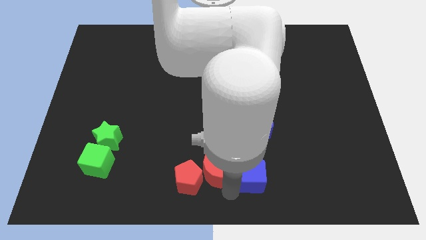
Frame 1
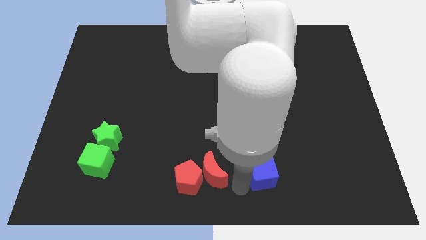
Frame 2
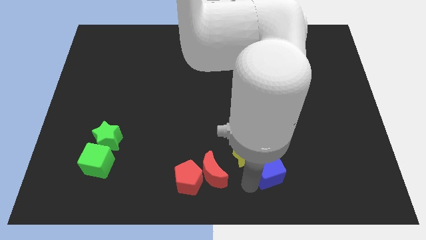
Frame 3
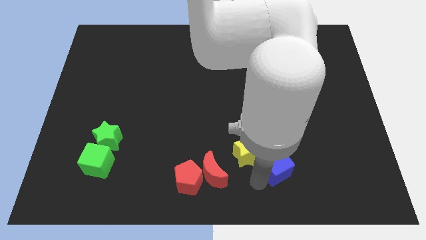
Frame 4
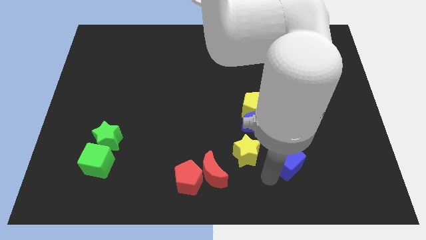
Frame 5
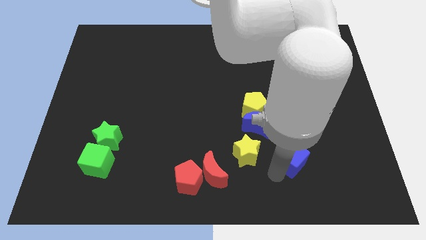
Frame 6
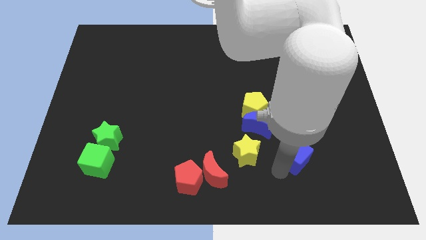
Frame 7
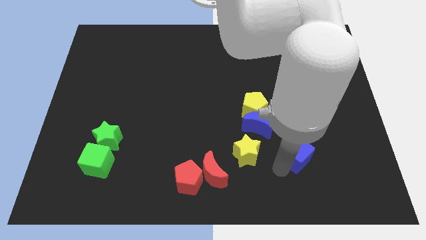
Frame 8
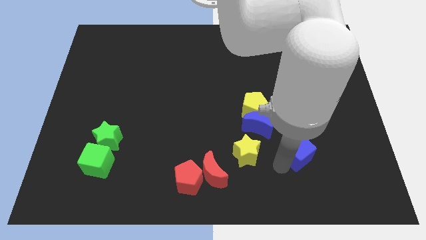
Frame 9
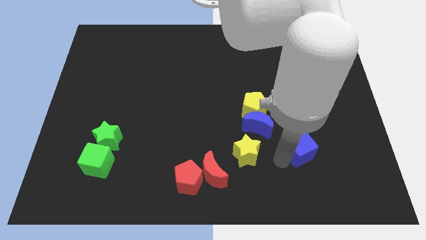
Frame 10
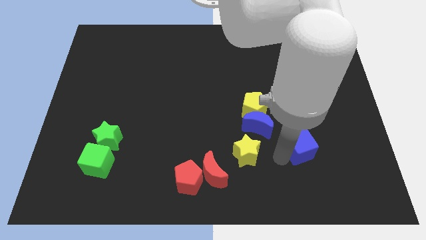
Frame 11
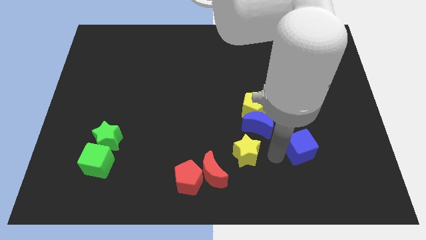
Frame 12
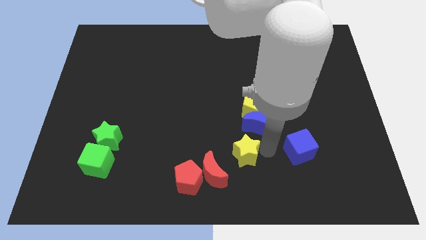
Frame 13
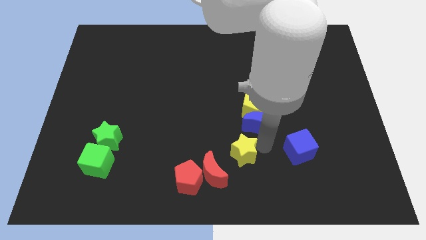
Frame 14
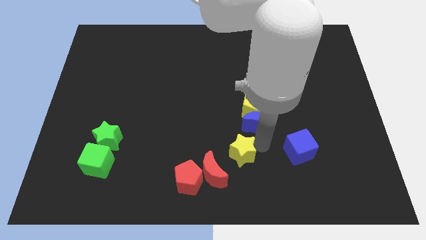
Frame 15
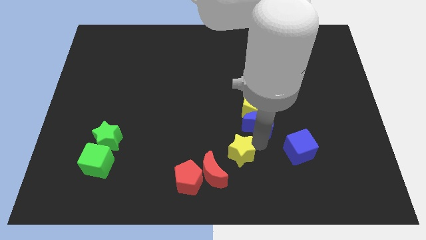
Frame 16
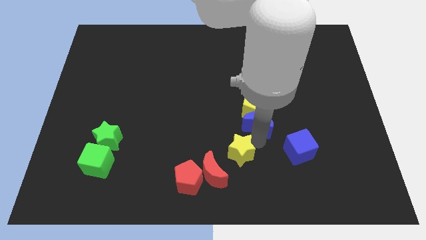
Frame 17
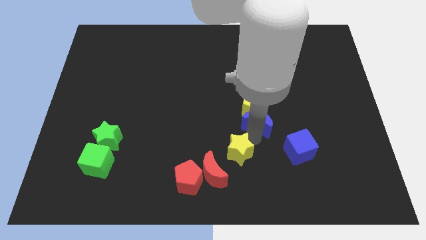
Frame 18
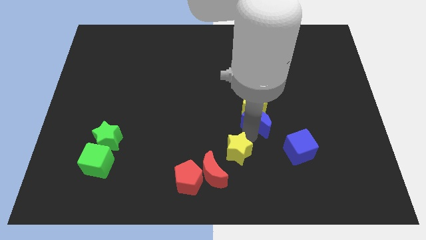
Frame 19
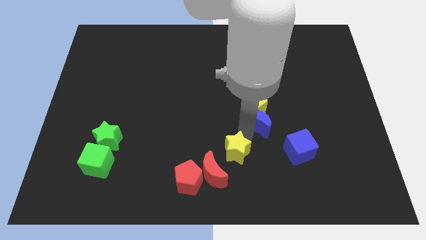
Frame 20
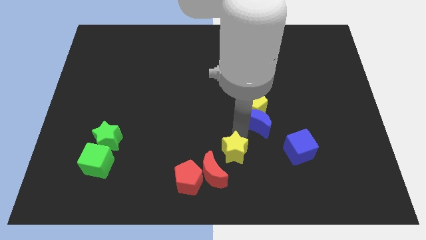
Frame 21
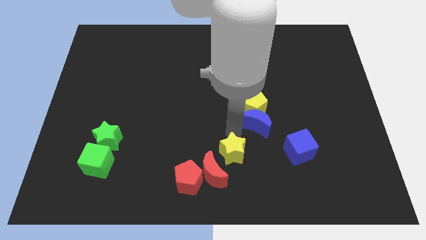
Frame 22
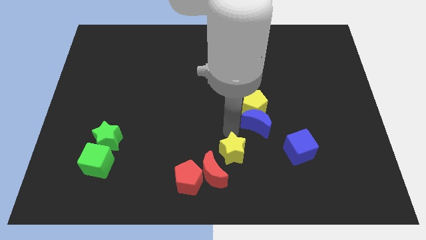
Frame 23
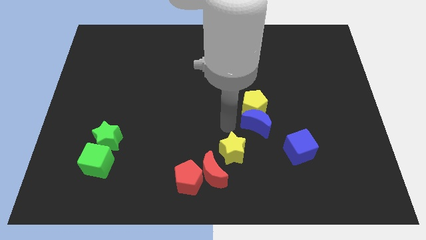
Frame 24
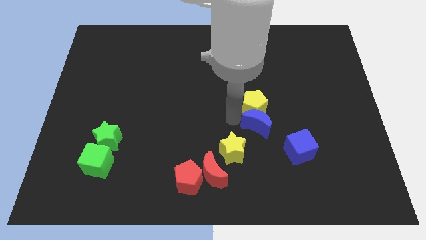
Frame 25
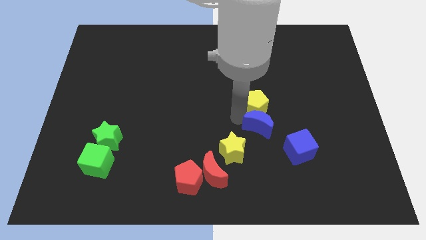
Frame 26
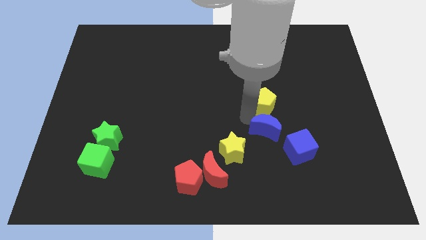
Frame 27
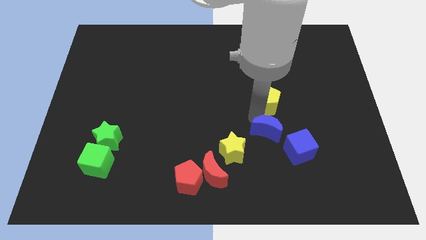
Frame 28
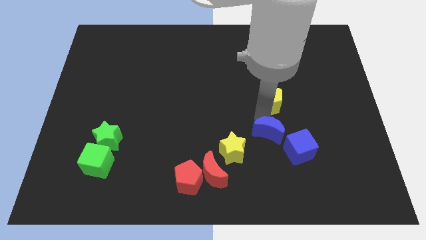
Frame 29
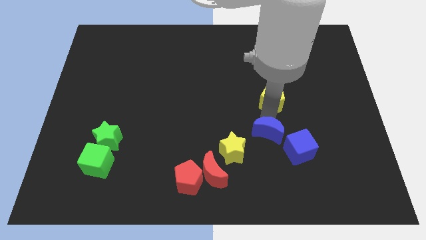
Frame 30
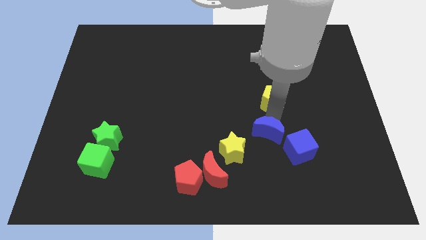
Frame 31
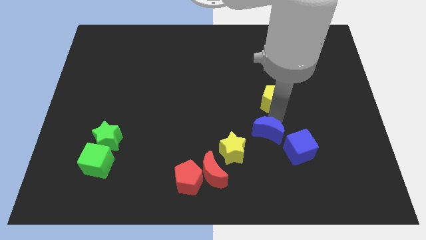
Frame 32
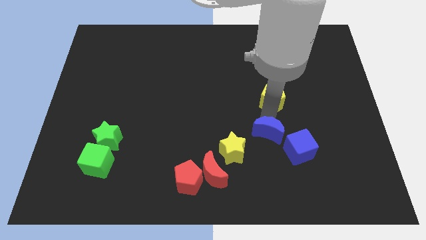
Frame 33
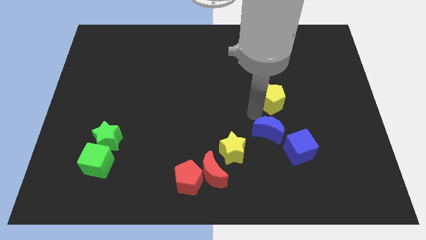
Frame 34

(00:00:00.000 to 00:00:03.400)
adjust the blue cube yellow star and the blue crescent to form a triangle

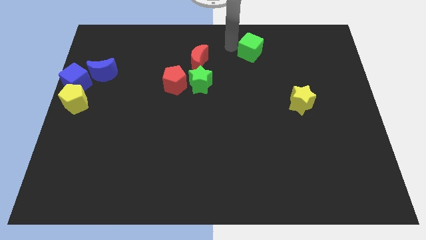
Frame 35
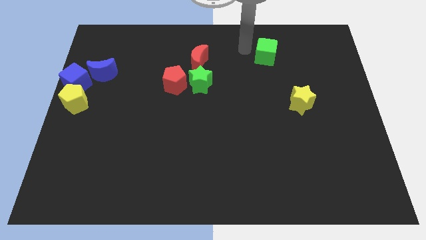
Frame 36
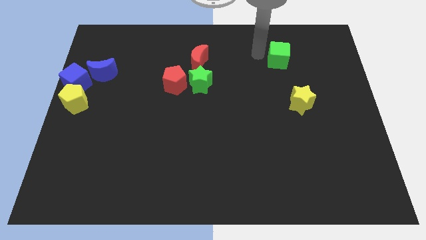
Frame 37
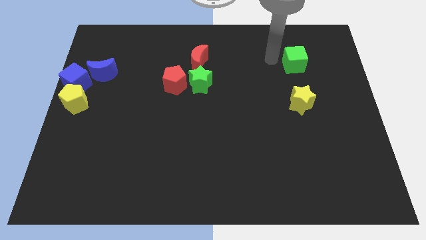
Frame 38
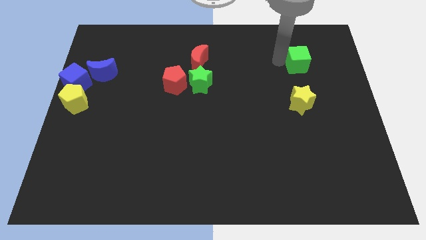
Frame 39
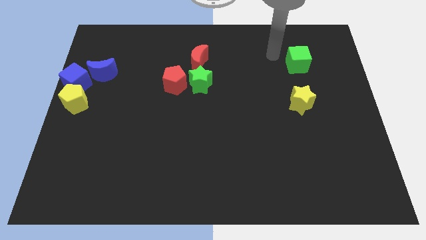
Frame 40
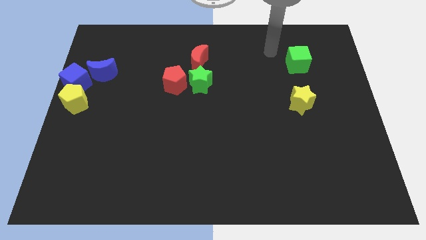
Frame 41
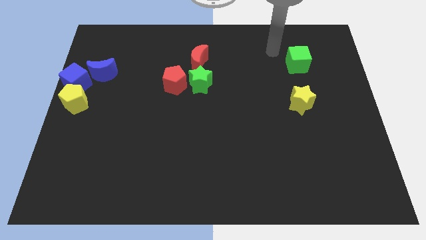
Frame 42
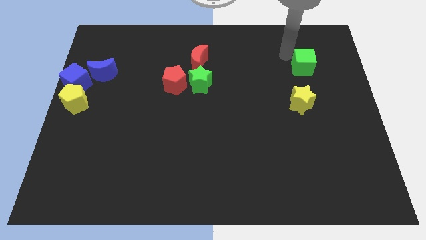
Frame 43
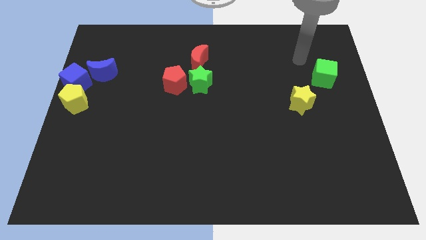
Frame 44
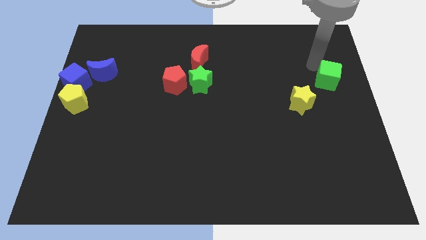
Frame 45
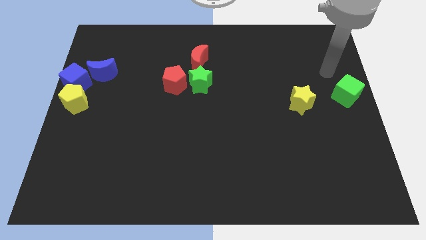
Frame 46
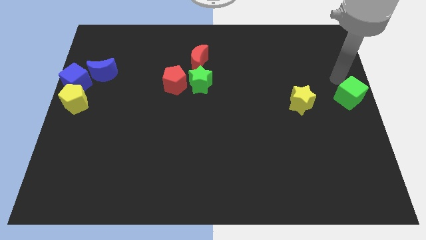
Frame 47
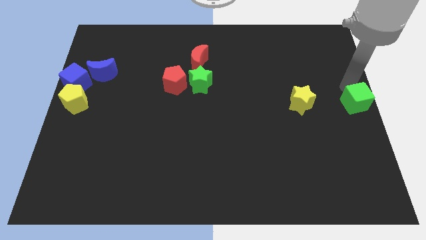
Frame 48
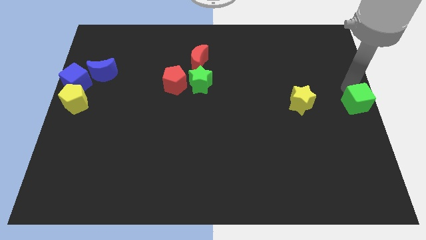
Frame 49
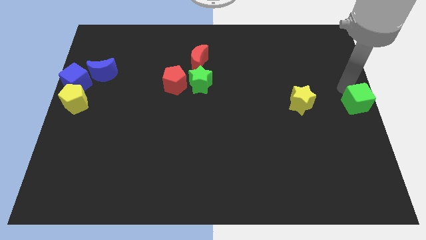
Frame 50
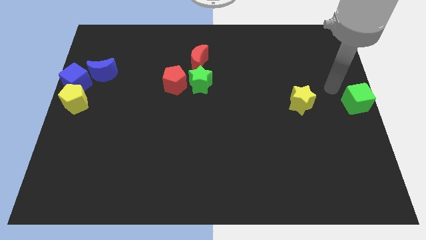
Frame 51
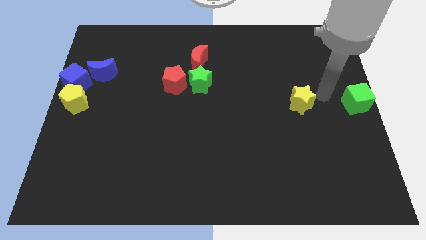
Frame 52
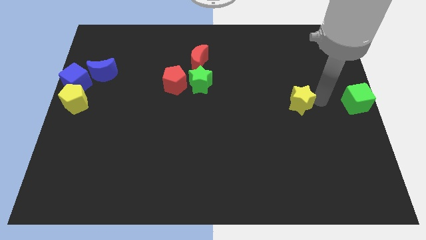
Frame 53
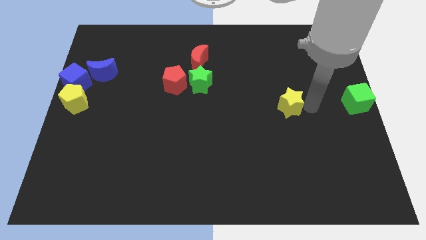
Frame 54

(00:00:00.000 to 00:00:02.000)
push the green cube slightly downwards

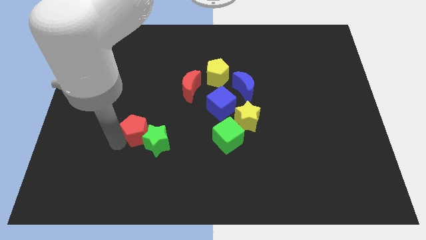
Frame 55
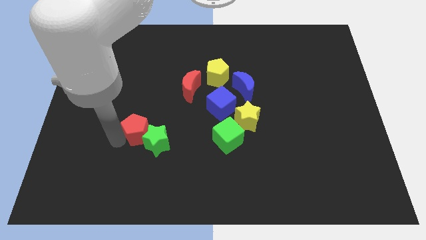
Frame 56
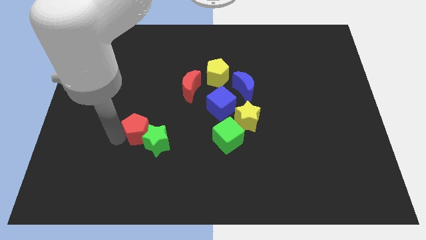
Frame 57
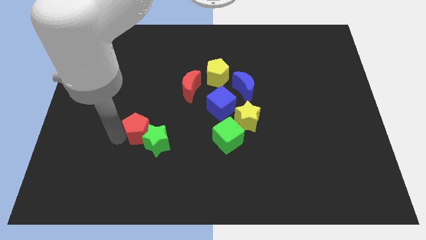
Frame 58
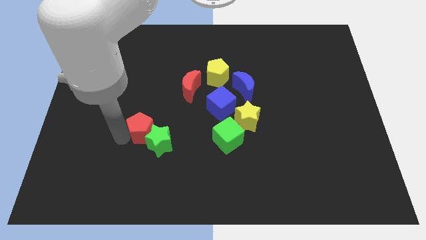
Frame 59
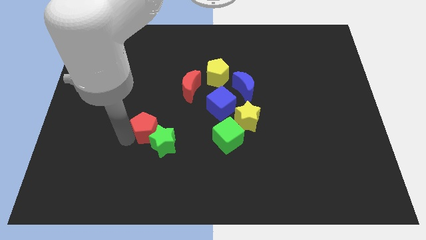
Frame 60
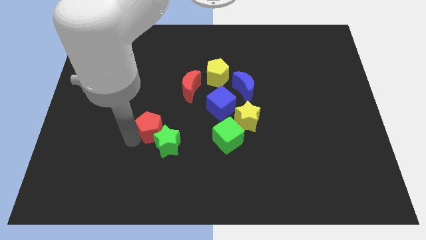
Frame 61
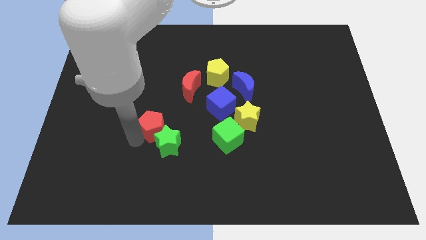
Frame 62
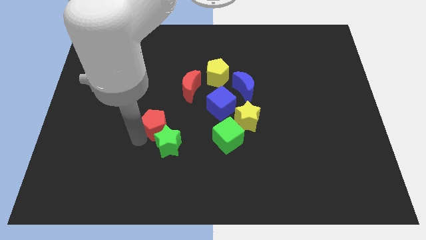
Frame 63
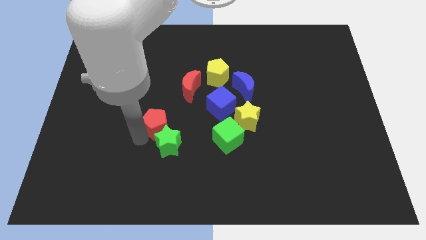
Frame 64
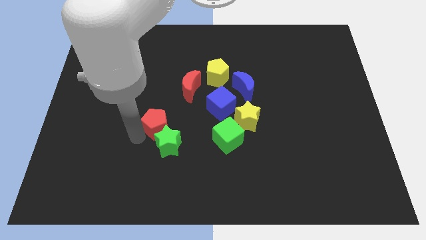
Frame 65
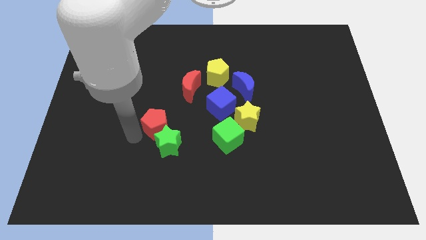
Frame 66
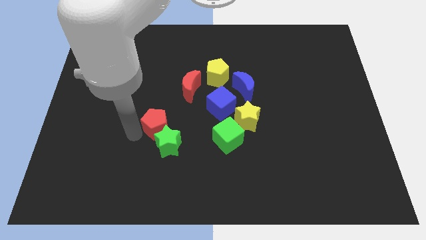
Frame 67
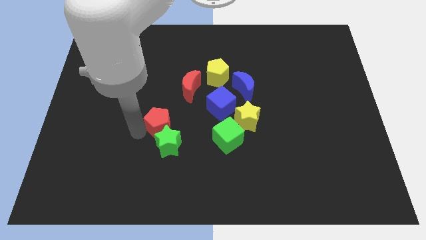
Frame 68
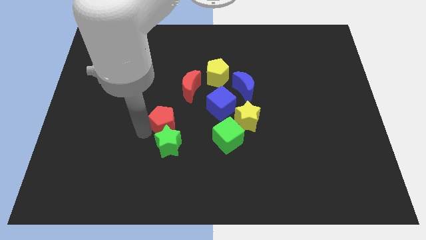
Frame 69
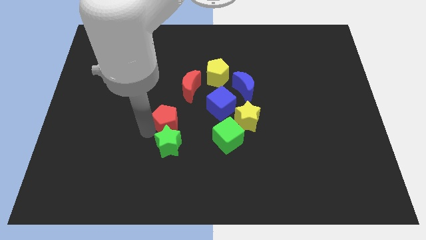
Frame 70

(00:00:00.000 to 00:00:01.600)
place the red pentagon above the green star

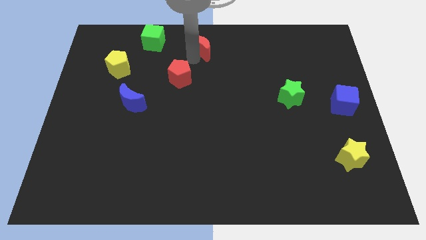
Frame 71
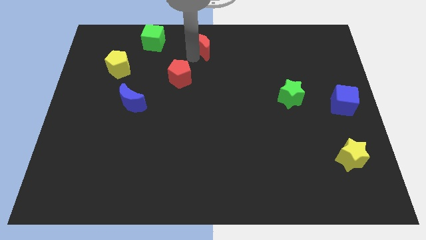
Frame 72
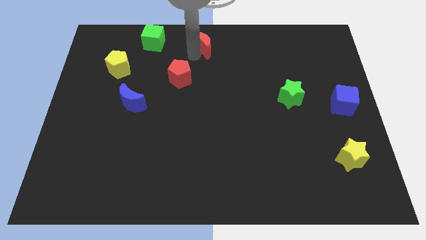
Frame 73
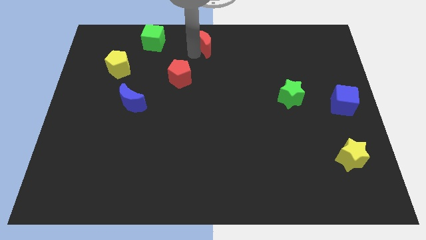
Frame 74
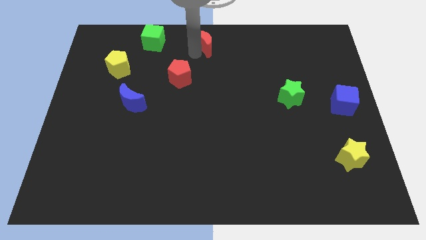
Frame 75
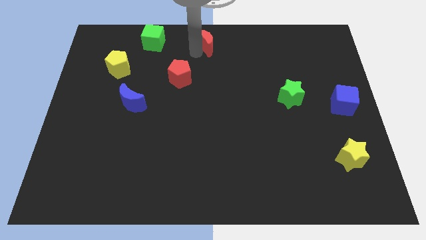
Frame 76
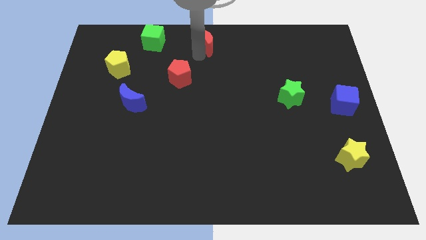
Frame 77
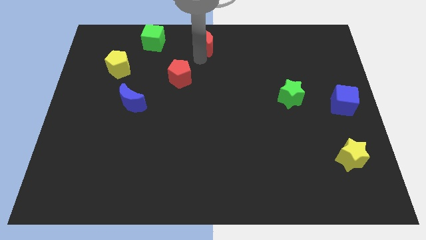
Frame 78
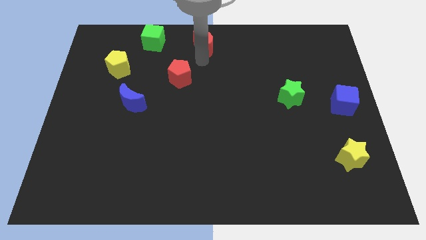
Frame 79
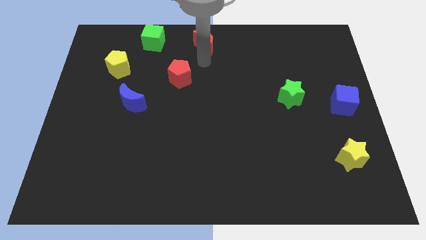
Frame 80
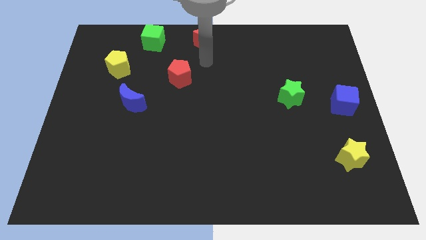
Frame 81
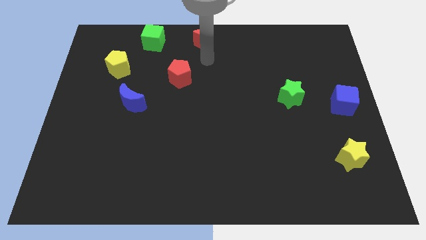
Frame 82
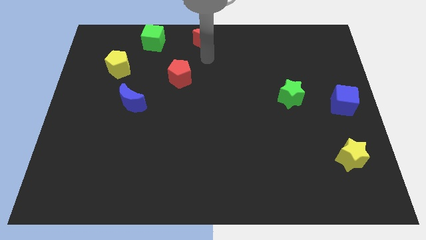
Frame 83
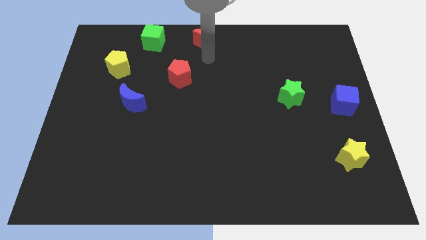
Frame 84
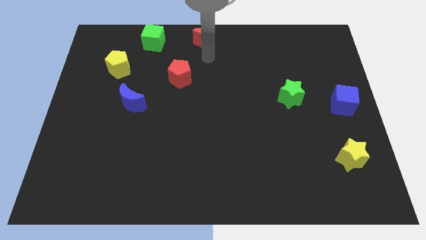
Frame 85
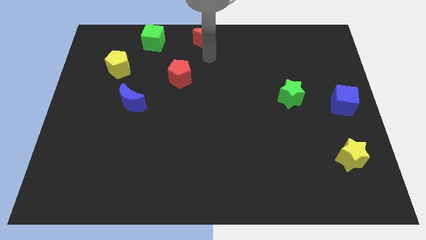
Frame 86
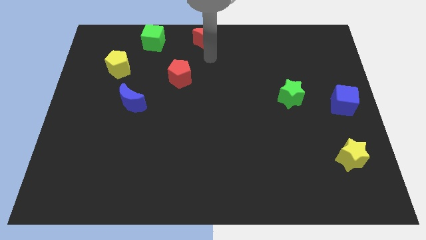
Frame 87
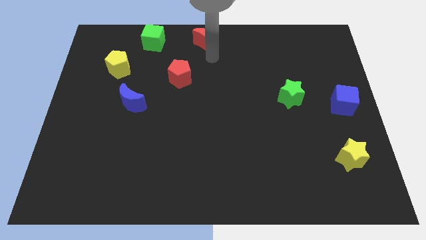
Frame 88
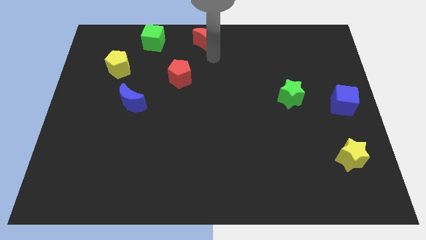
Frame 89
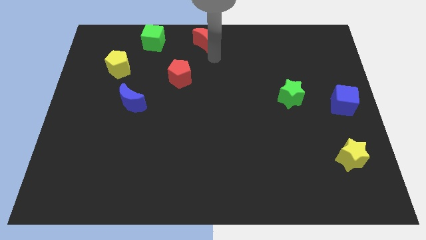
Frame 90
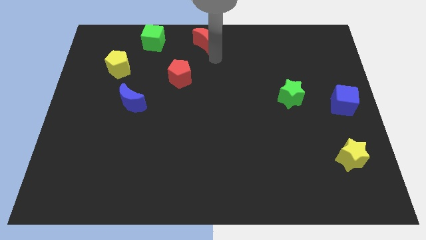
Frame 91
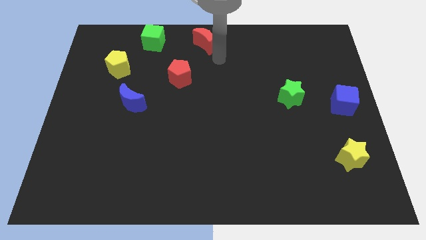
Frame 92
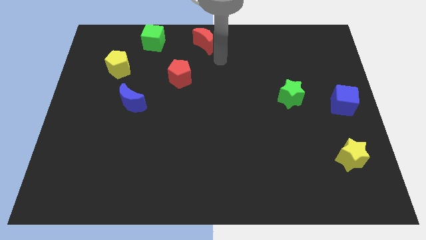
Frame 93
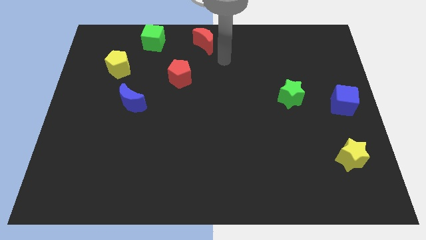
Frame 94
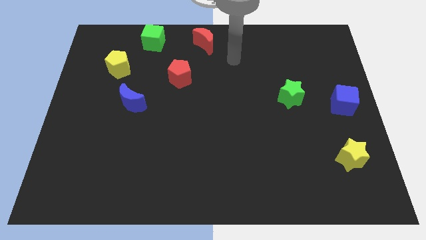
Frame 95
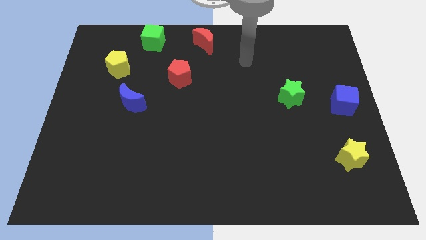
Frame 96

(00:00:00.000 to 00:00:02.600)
place the red crescent to the right of the green cube
